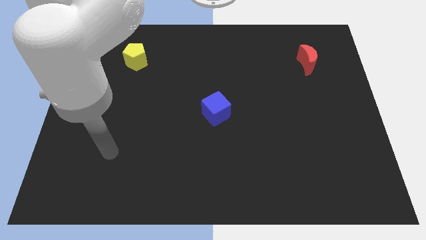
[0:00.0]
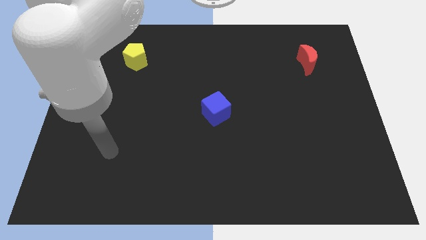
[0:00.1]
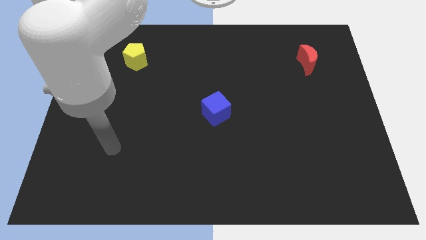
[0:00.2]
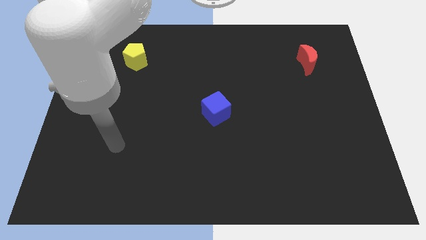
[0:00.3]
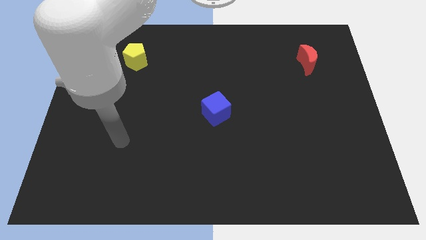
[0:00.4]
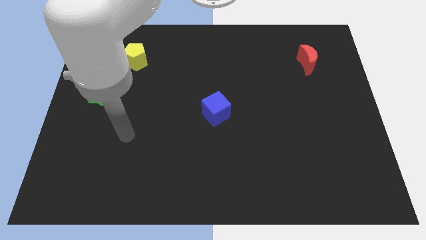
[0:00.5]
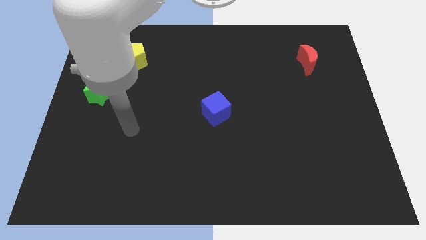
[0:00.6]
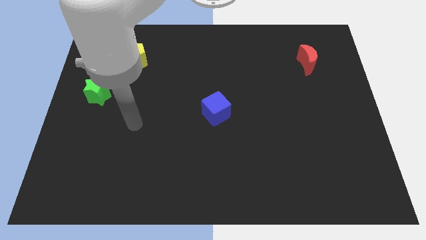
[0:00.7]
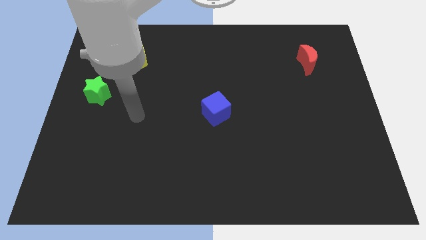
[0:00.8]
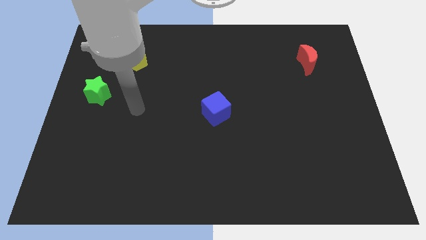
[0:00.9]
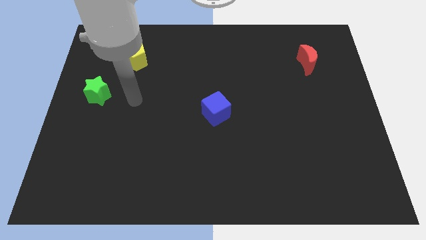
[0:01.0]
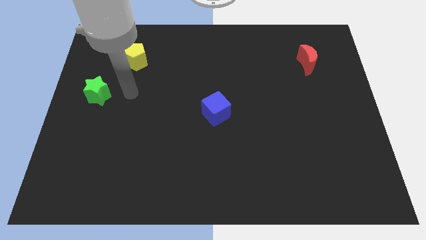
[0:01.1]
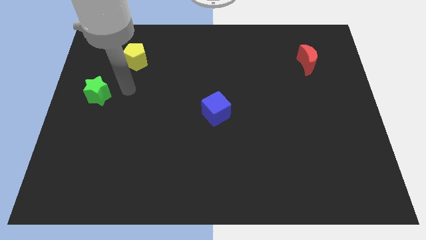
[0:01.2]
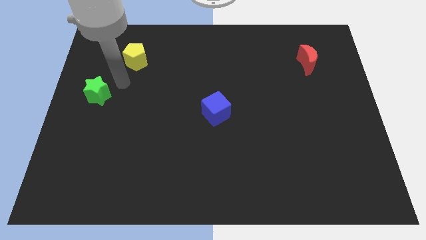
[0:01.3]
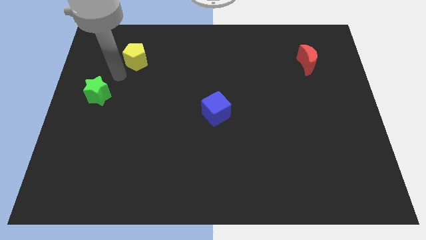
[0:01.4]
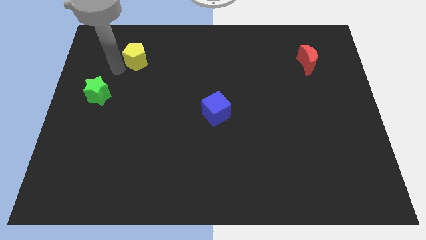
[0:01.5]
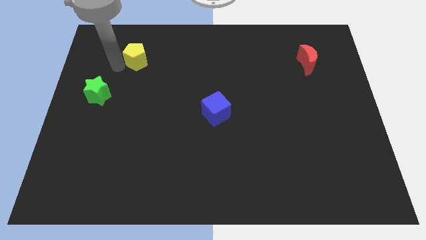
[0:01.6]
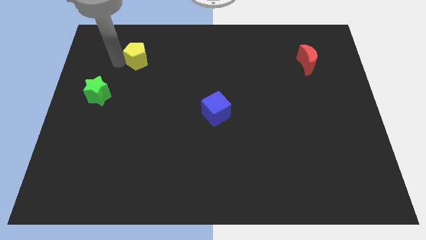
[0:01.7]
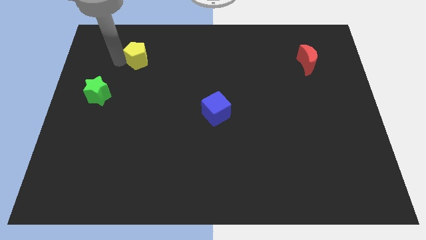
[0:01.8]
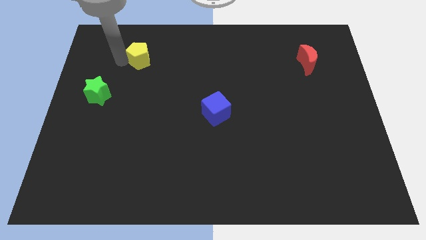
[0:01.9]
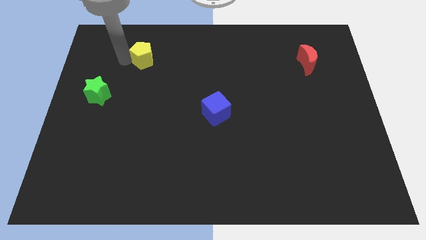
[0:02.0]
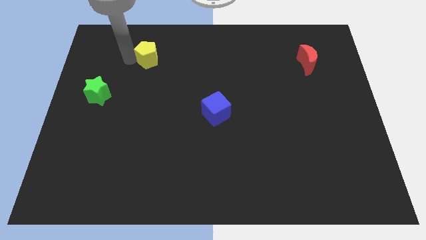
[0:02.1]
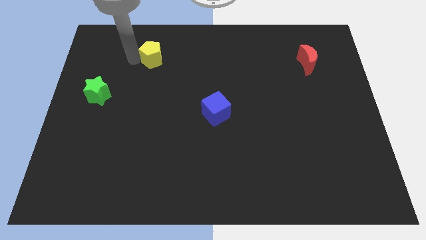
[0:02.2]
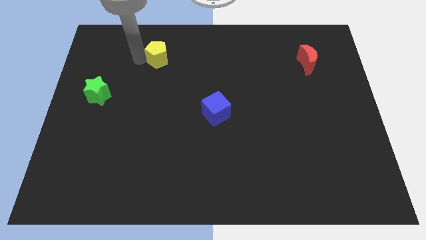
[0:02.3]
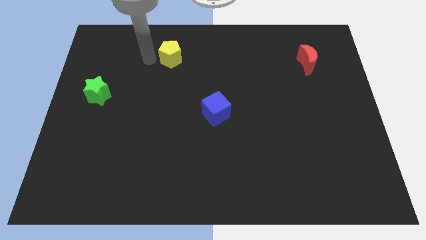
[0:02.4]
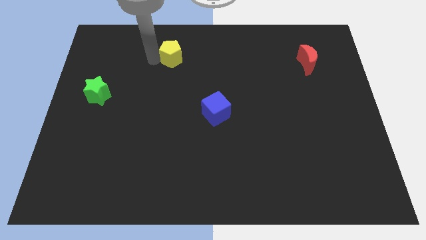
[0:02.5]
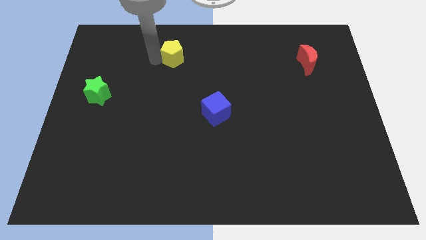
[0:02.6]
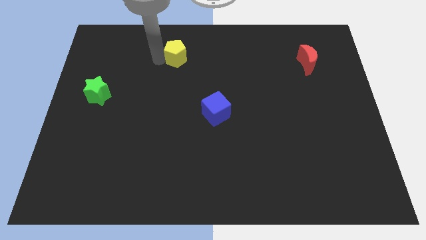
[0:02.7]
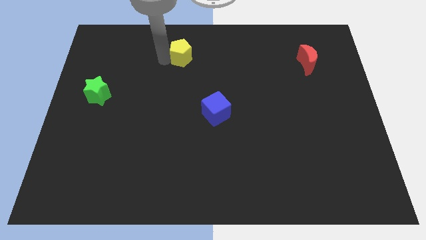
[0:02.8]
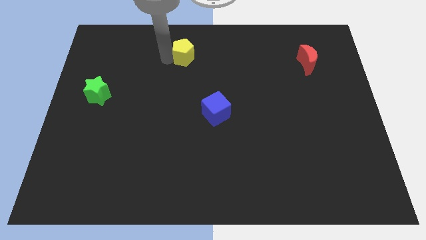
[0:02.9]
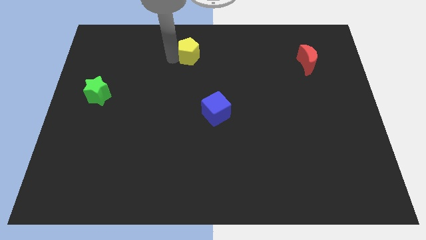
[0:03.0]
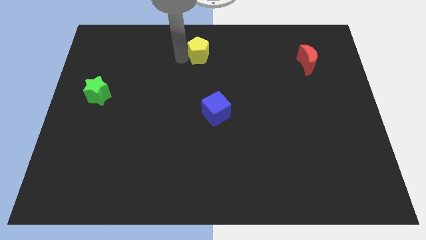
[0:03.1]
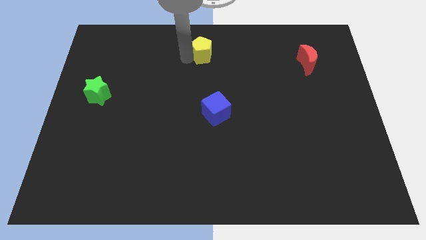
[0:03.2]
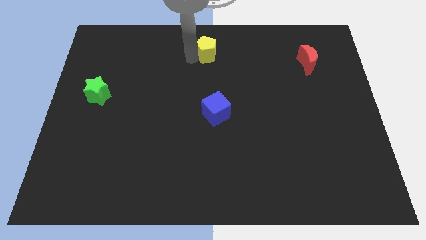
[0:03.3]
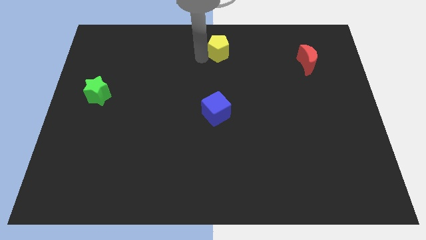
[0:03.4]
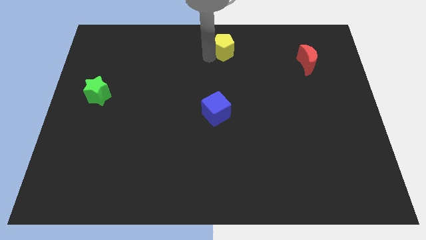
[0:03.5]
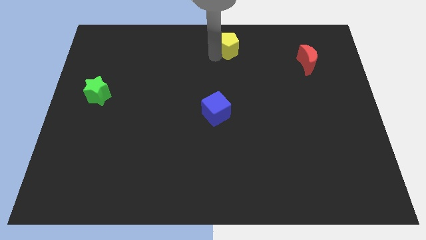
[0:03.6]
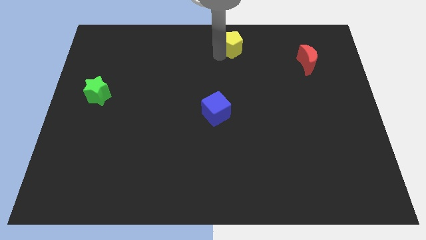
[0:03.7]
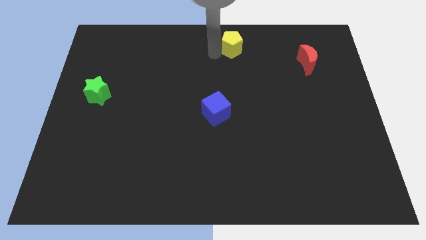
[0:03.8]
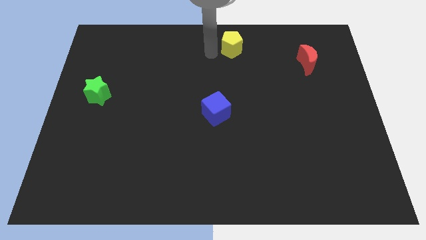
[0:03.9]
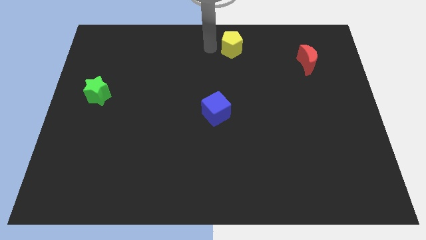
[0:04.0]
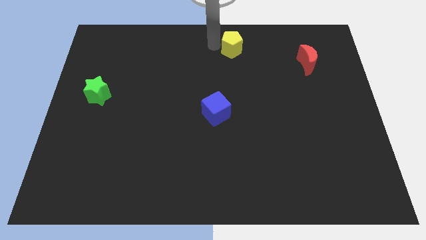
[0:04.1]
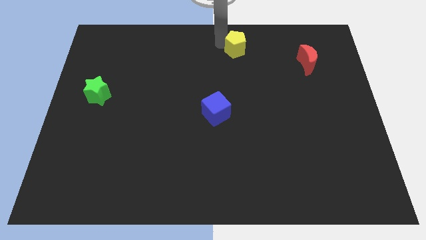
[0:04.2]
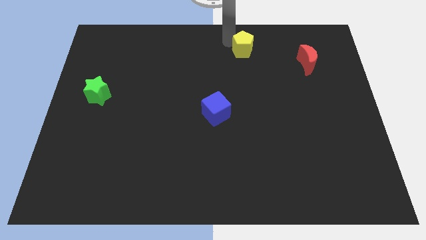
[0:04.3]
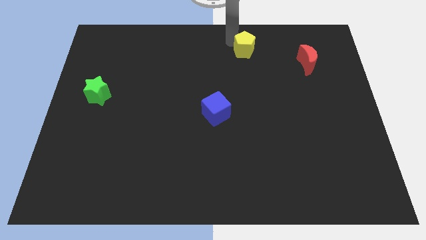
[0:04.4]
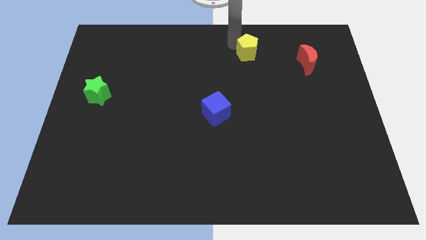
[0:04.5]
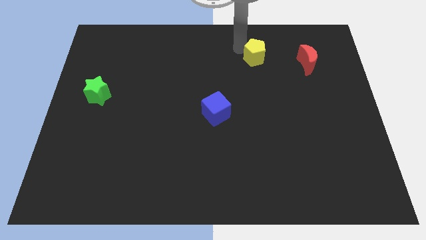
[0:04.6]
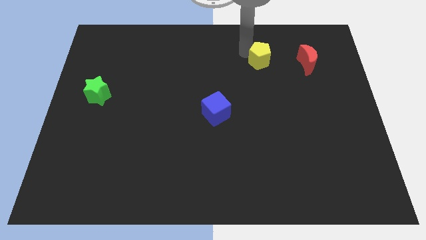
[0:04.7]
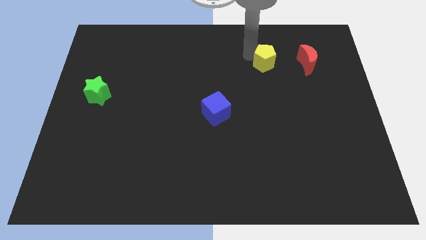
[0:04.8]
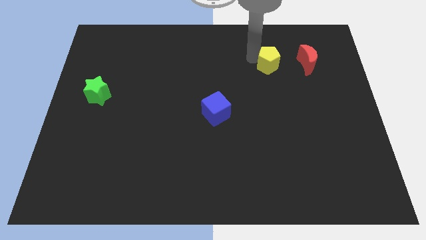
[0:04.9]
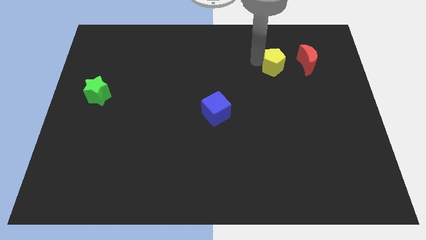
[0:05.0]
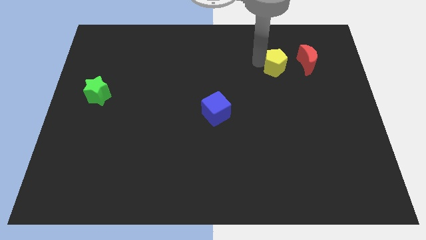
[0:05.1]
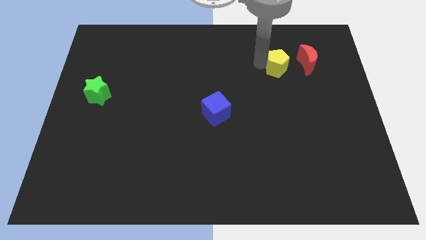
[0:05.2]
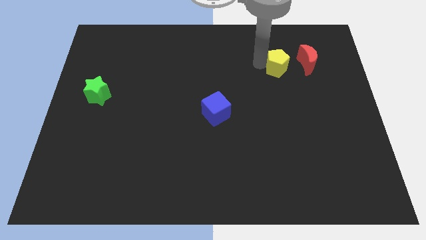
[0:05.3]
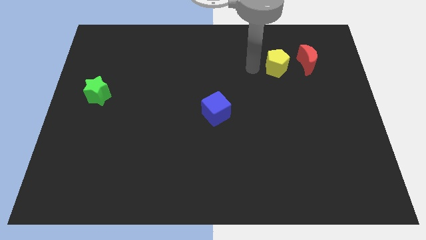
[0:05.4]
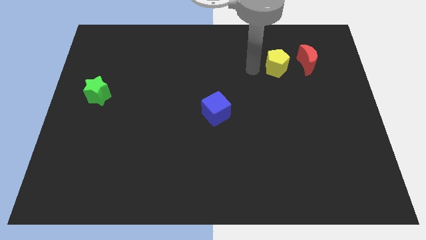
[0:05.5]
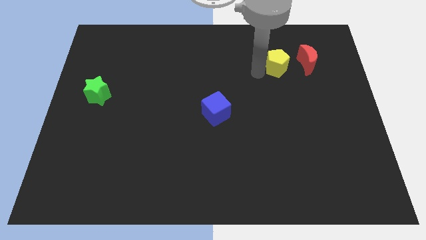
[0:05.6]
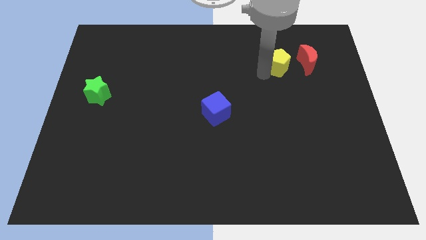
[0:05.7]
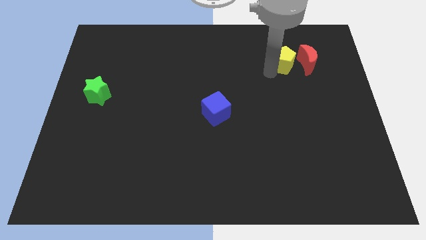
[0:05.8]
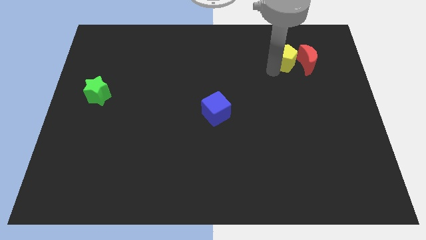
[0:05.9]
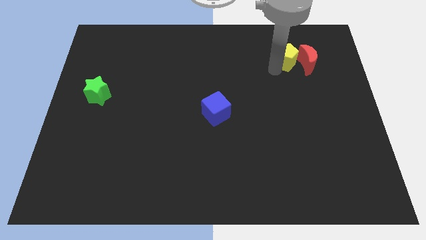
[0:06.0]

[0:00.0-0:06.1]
put the yellow pentagon next to the moon

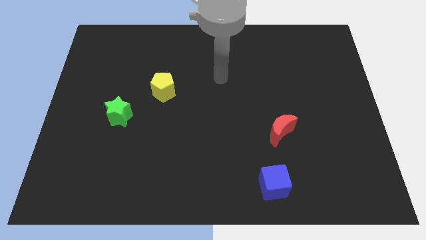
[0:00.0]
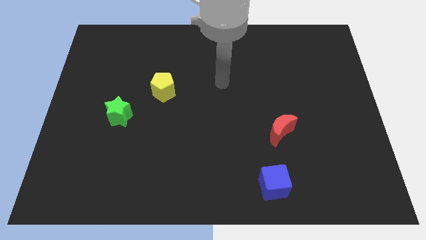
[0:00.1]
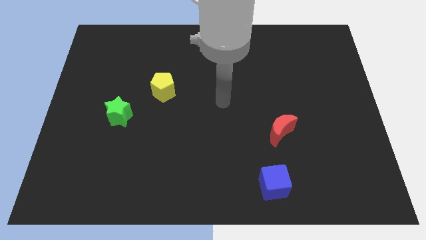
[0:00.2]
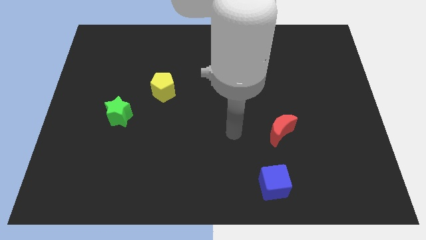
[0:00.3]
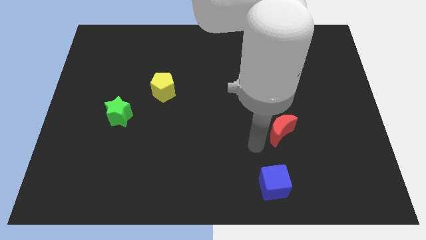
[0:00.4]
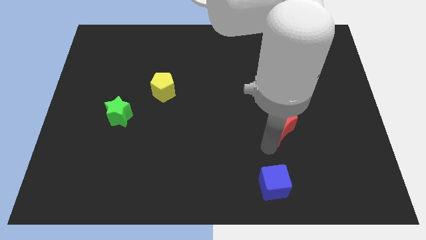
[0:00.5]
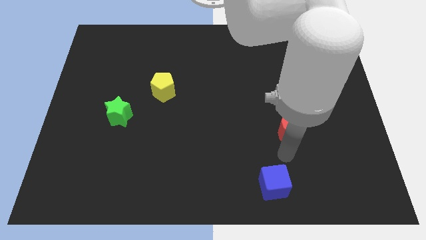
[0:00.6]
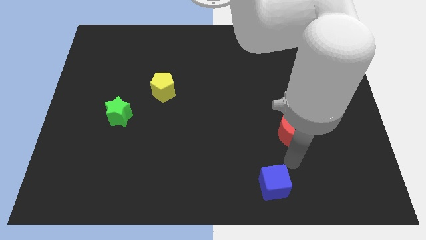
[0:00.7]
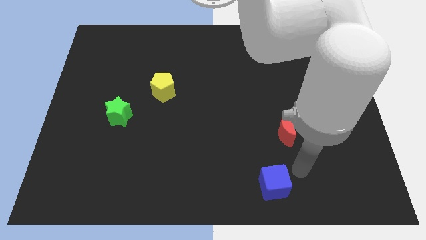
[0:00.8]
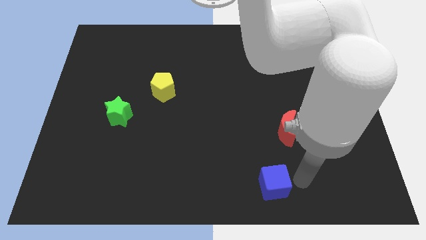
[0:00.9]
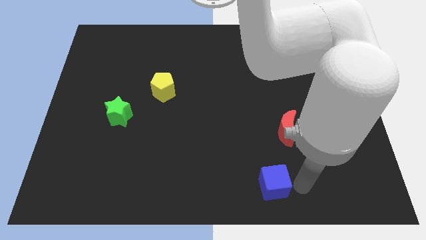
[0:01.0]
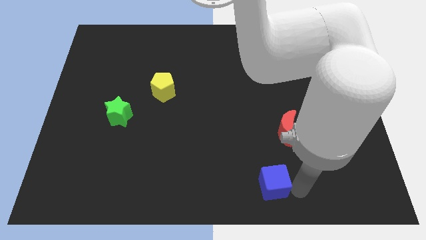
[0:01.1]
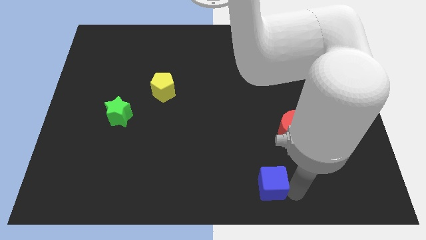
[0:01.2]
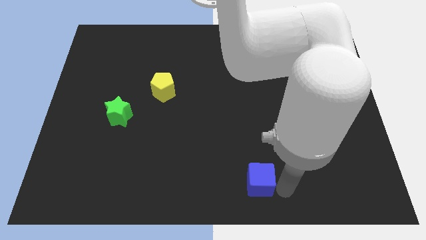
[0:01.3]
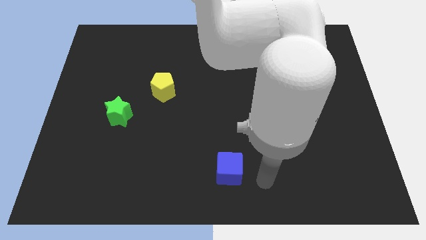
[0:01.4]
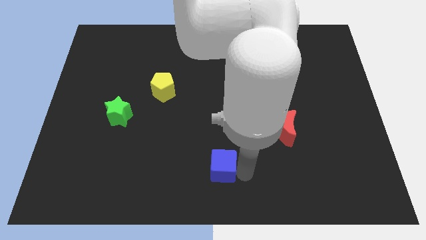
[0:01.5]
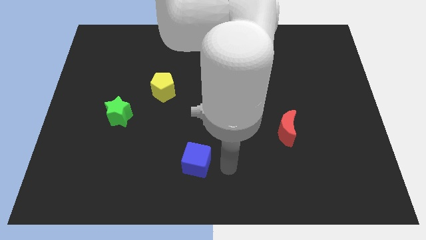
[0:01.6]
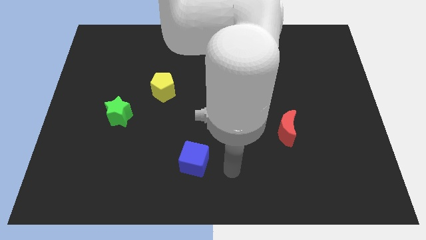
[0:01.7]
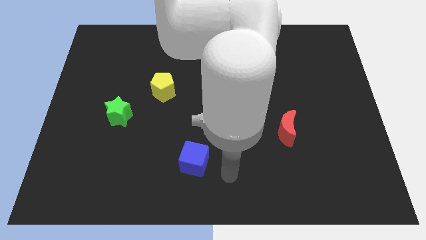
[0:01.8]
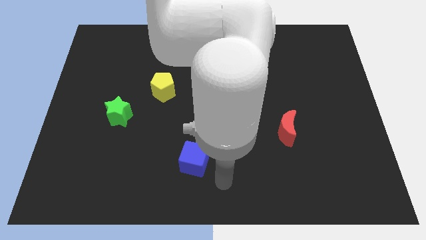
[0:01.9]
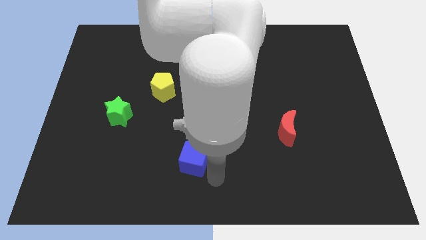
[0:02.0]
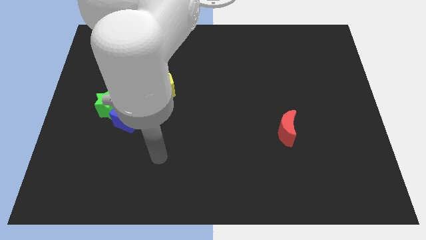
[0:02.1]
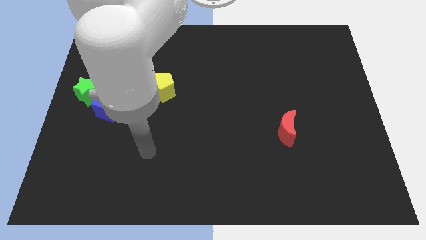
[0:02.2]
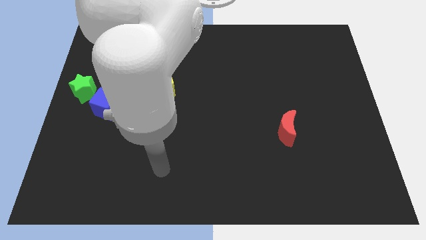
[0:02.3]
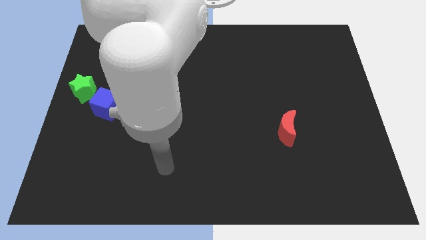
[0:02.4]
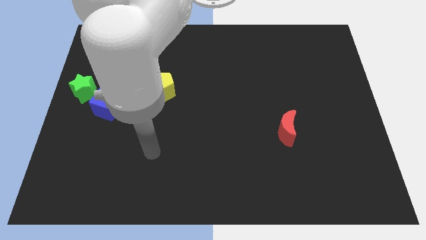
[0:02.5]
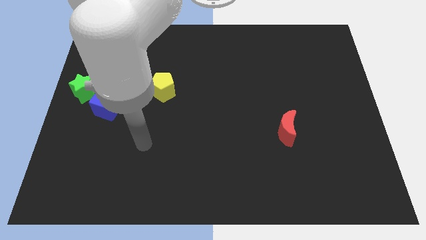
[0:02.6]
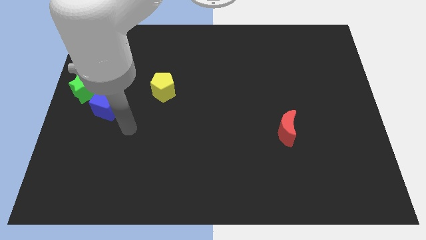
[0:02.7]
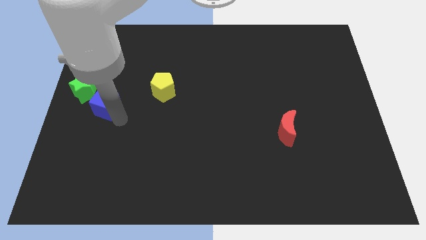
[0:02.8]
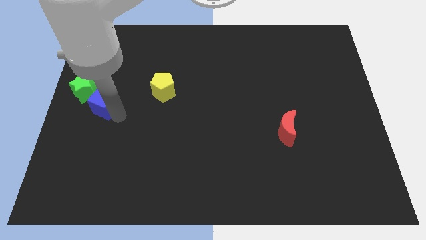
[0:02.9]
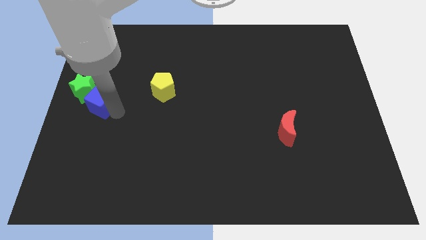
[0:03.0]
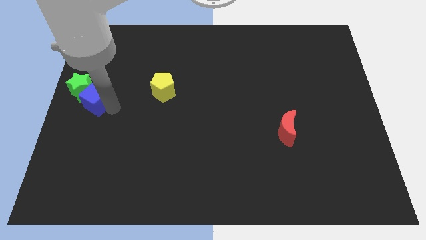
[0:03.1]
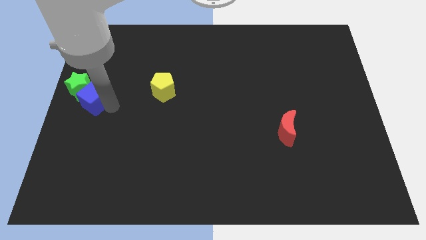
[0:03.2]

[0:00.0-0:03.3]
slide the blue block towards the star
